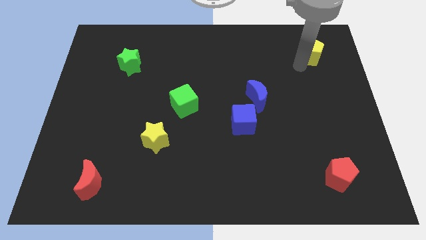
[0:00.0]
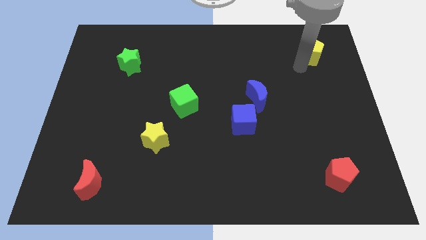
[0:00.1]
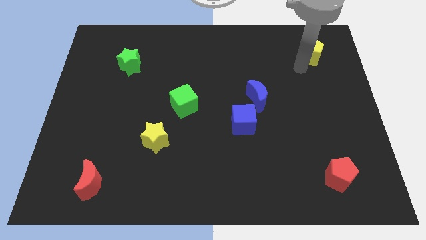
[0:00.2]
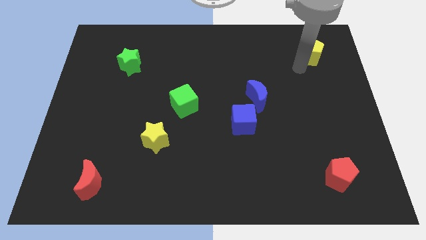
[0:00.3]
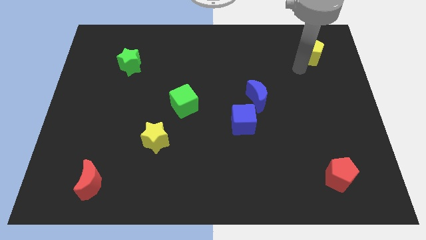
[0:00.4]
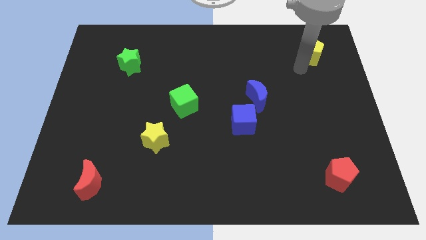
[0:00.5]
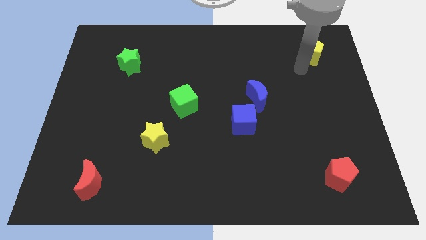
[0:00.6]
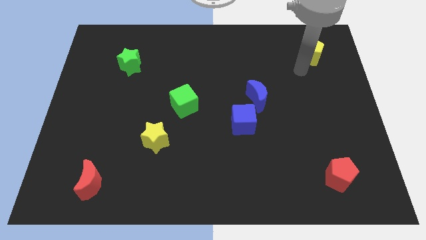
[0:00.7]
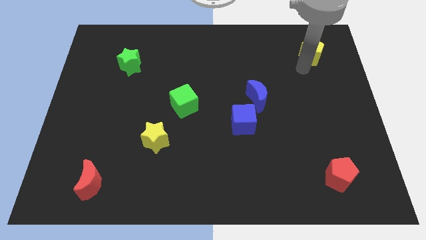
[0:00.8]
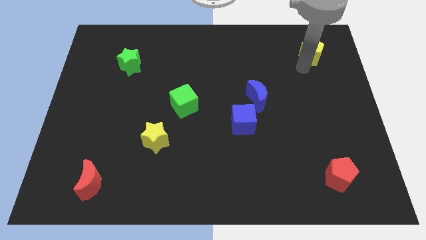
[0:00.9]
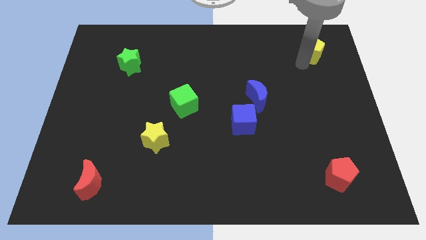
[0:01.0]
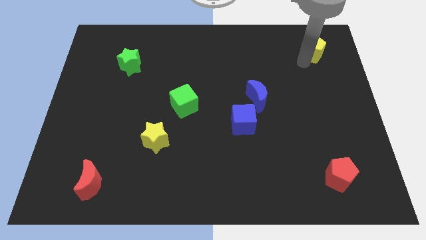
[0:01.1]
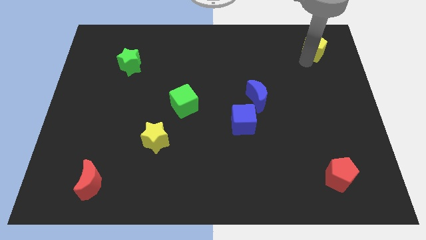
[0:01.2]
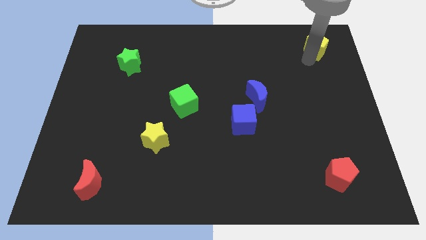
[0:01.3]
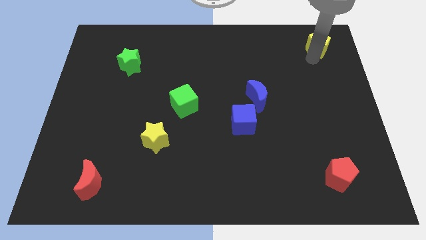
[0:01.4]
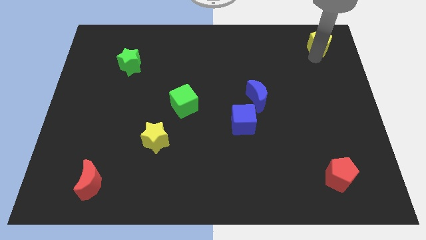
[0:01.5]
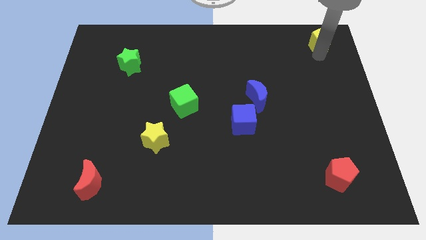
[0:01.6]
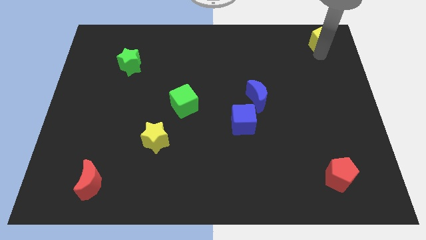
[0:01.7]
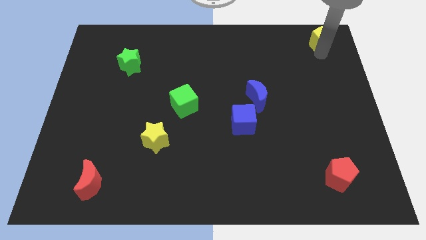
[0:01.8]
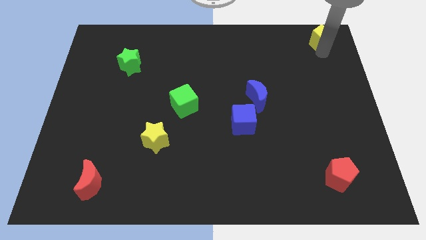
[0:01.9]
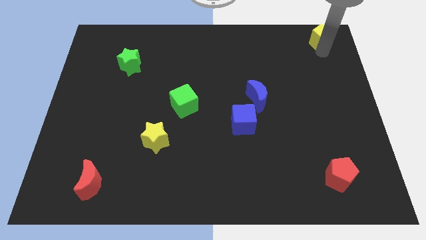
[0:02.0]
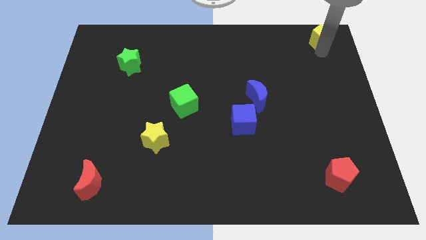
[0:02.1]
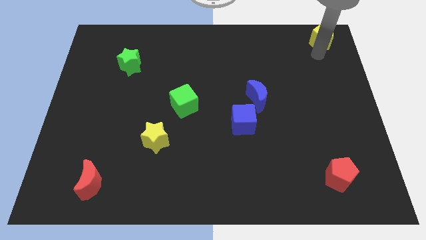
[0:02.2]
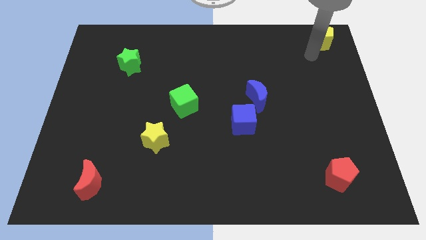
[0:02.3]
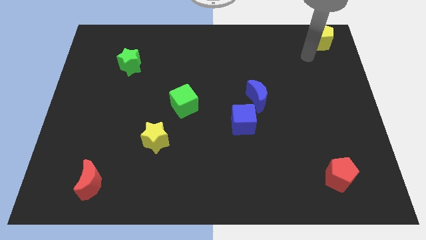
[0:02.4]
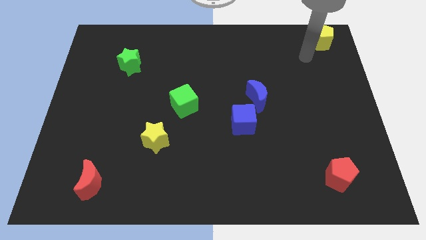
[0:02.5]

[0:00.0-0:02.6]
push yellow pentagon to the top right corner of the board

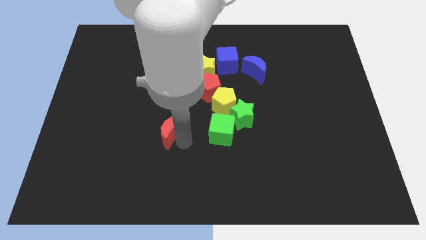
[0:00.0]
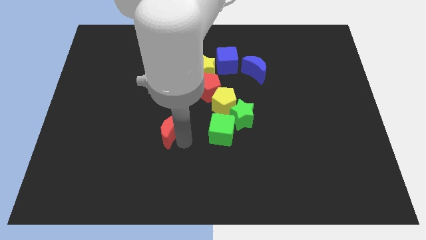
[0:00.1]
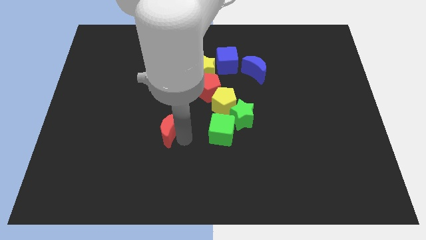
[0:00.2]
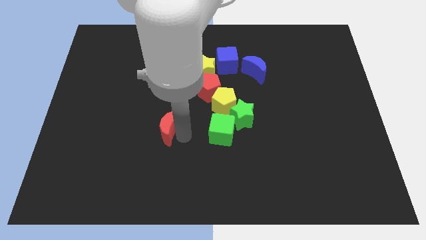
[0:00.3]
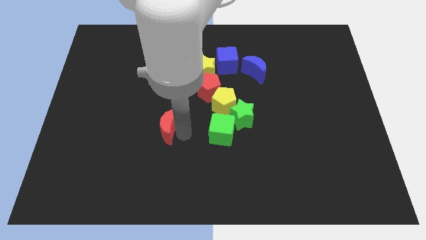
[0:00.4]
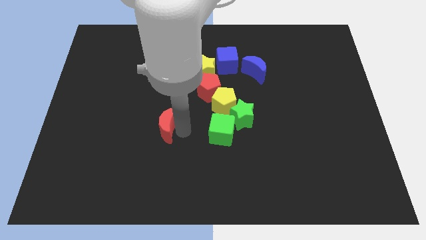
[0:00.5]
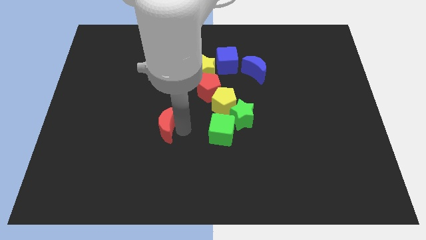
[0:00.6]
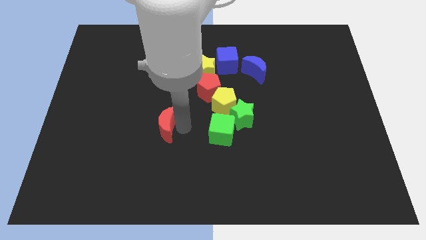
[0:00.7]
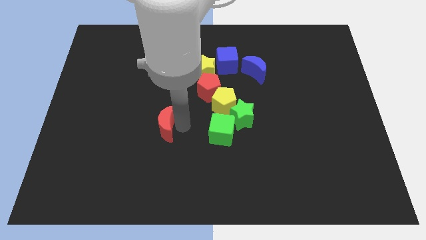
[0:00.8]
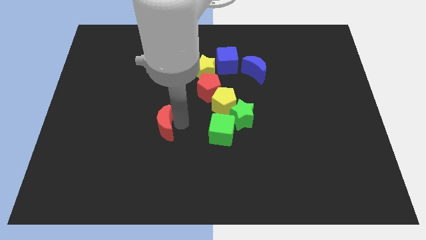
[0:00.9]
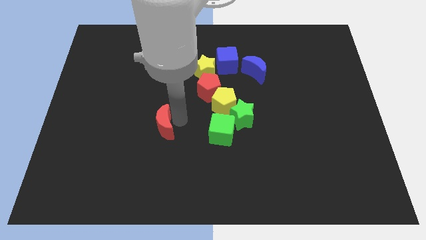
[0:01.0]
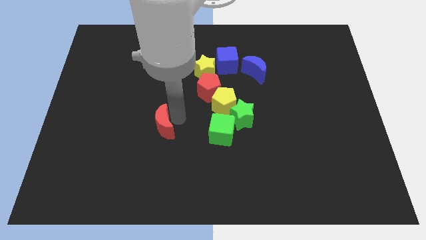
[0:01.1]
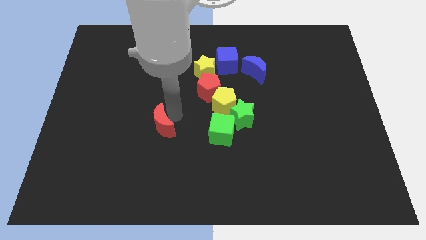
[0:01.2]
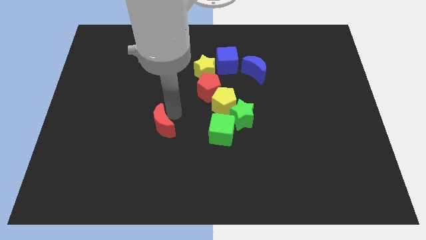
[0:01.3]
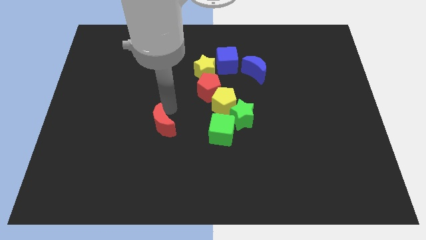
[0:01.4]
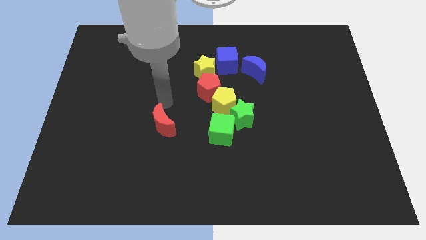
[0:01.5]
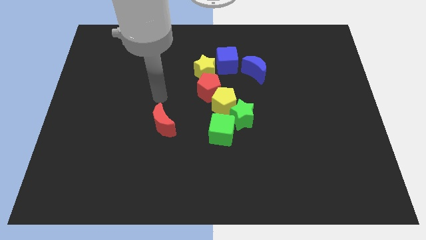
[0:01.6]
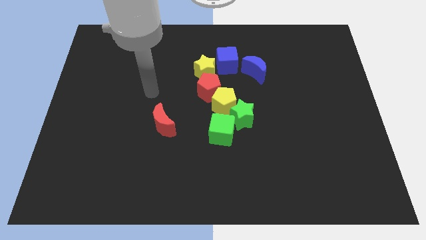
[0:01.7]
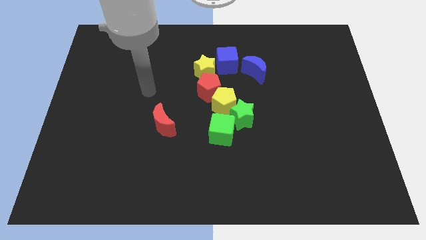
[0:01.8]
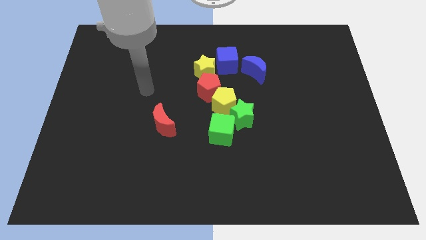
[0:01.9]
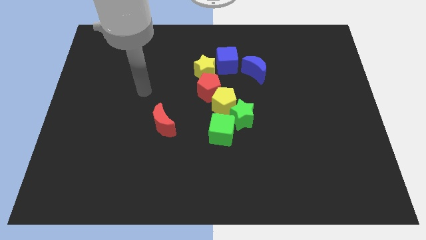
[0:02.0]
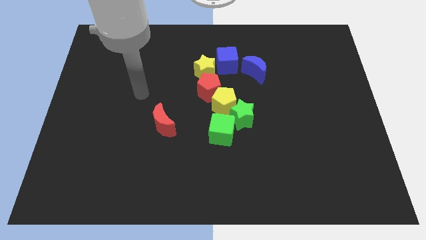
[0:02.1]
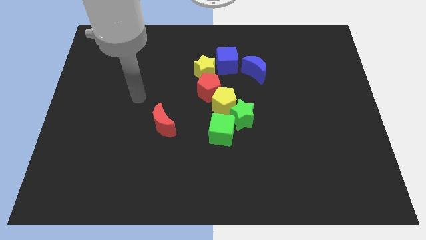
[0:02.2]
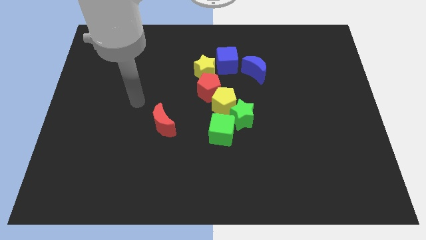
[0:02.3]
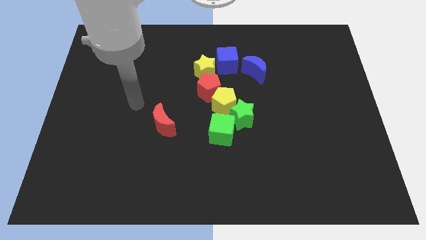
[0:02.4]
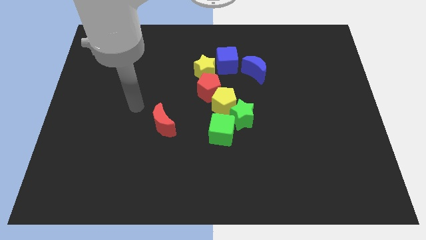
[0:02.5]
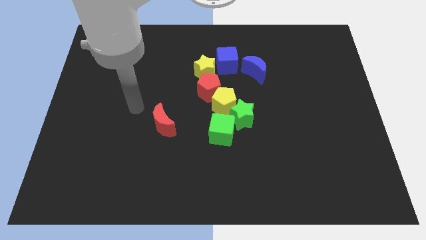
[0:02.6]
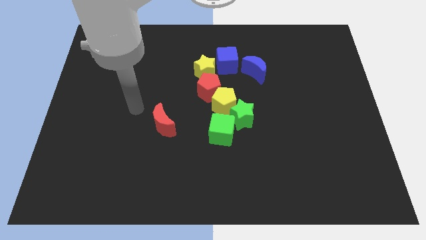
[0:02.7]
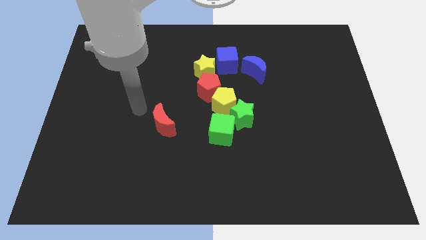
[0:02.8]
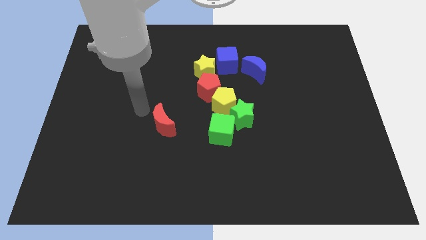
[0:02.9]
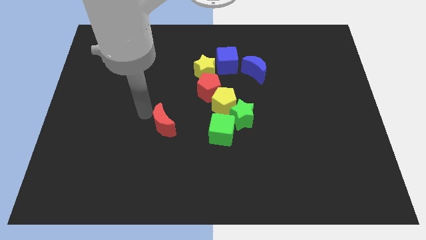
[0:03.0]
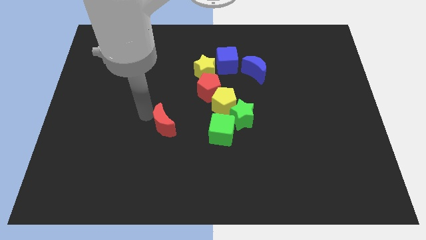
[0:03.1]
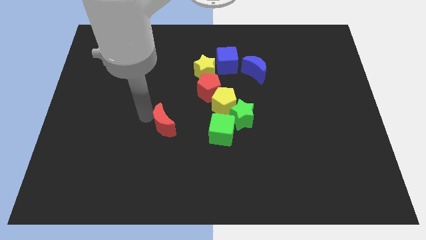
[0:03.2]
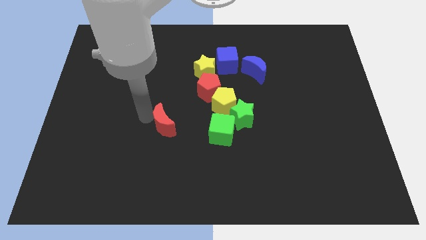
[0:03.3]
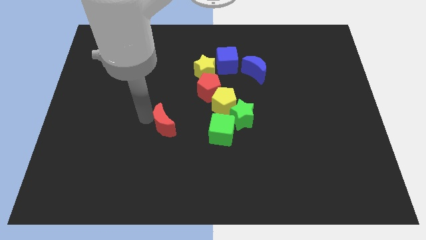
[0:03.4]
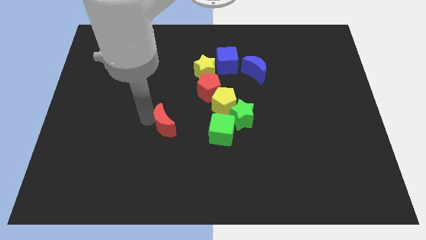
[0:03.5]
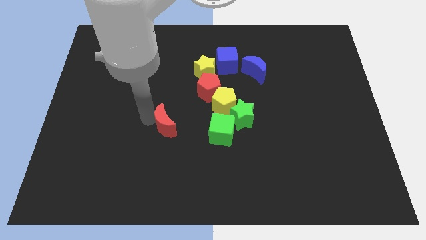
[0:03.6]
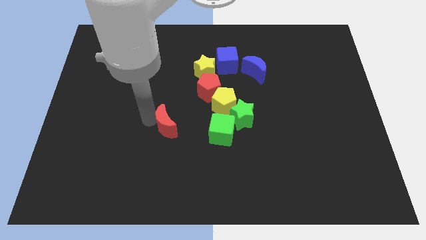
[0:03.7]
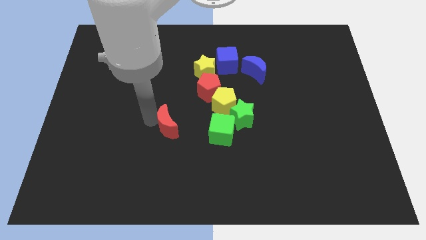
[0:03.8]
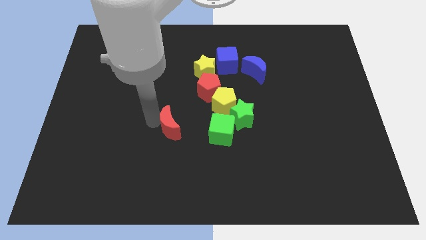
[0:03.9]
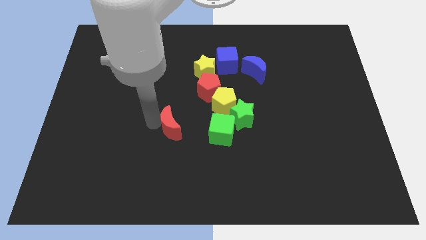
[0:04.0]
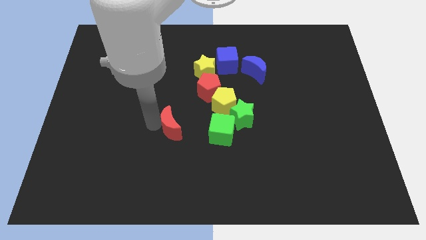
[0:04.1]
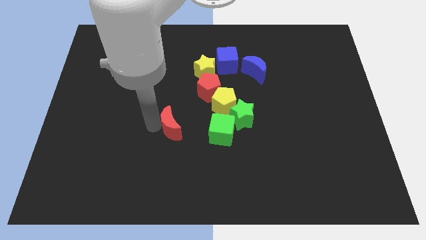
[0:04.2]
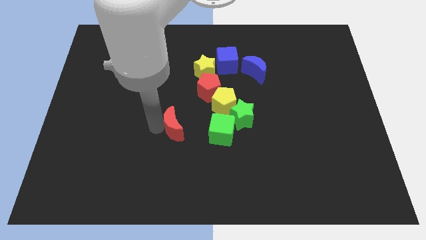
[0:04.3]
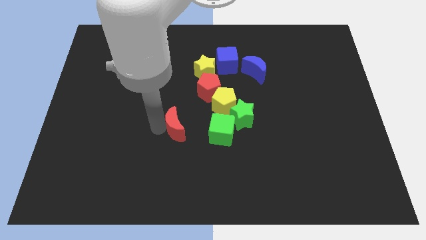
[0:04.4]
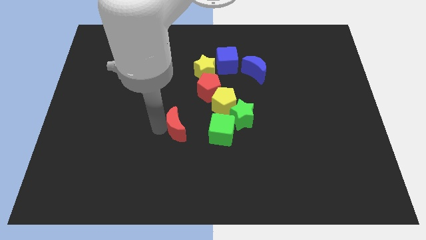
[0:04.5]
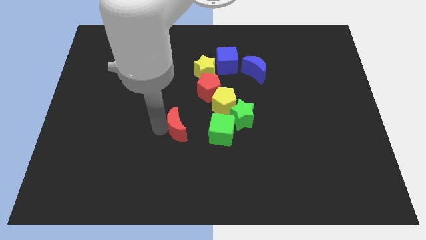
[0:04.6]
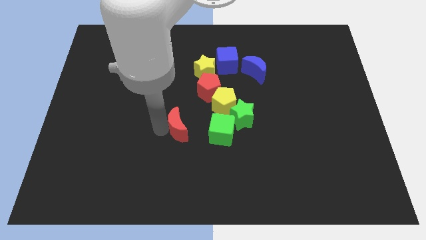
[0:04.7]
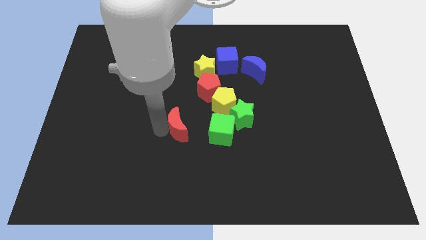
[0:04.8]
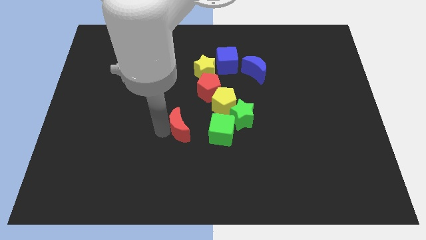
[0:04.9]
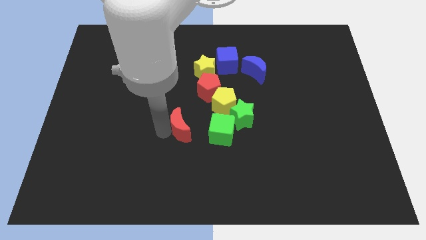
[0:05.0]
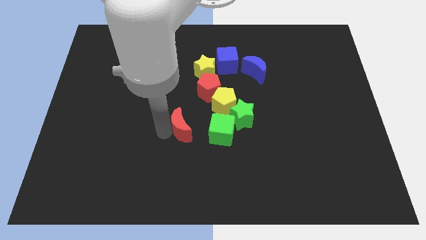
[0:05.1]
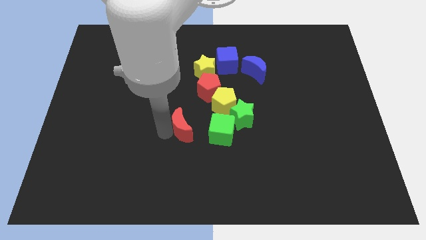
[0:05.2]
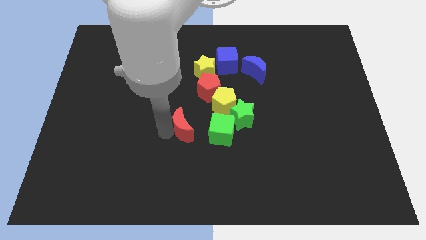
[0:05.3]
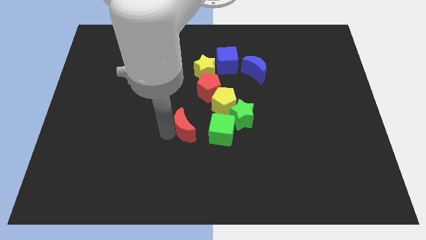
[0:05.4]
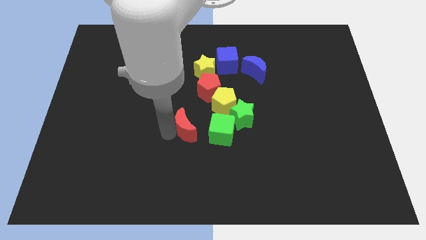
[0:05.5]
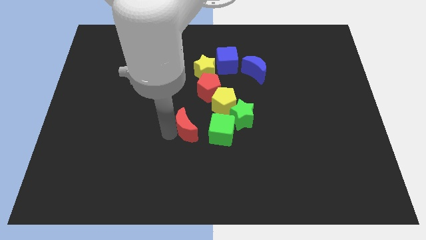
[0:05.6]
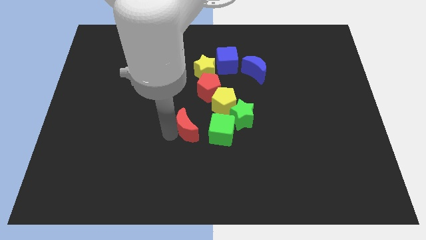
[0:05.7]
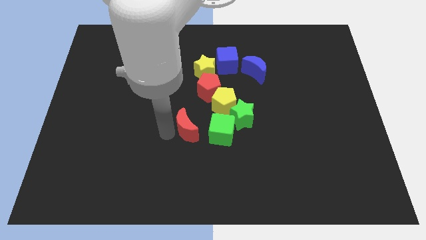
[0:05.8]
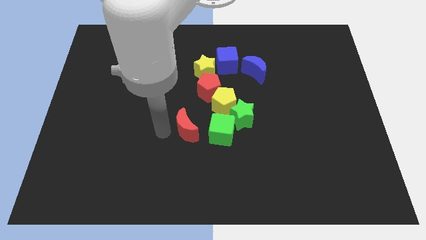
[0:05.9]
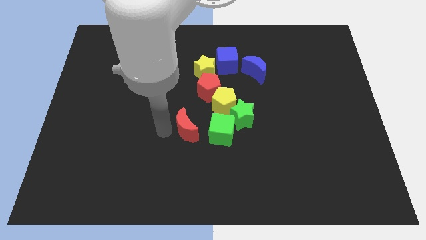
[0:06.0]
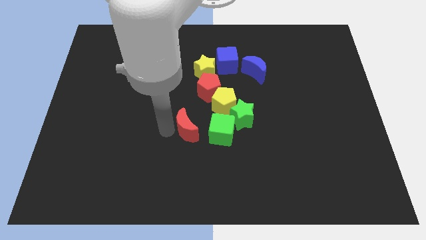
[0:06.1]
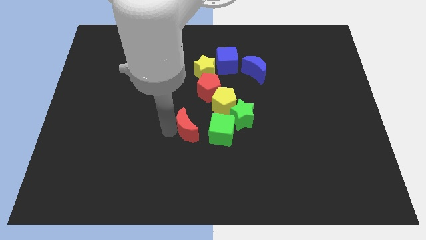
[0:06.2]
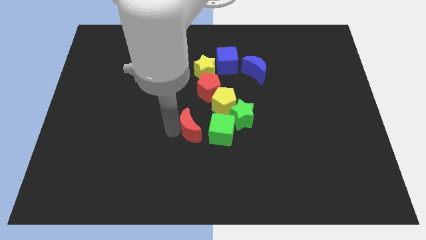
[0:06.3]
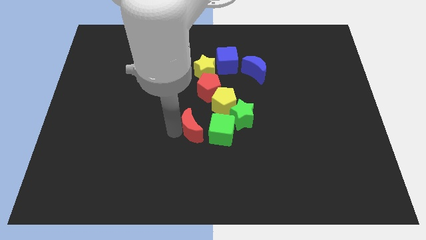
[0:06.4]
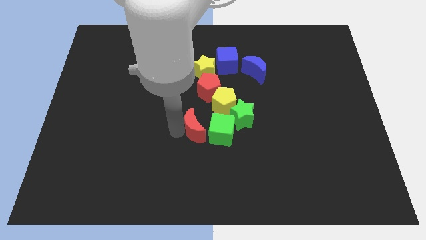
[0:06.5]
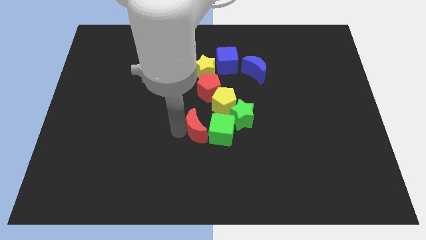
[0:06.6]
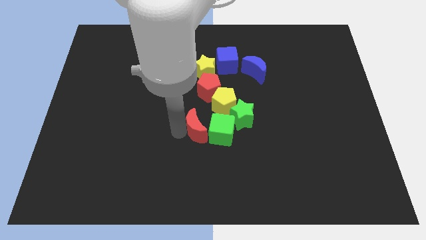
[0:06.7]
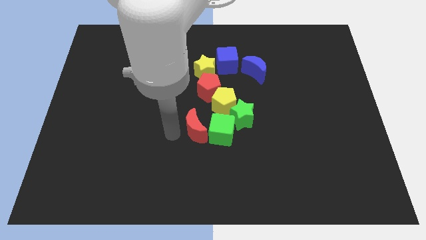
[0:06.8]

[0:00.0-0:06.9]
place the red crescent to the left of the green cube
